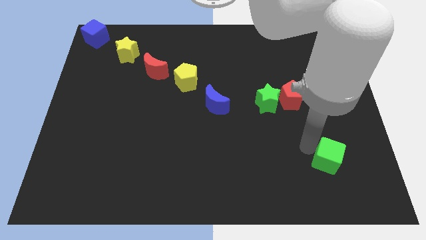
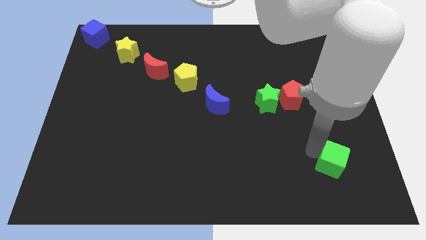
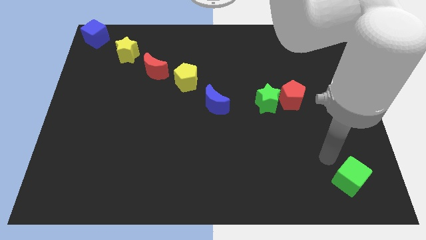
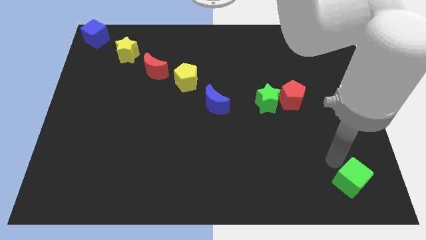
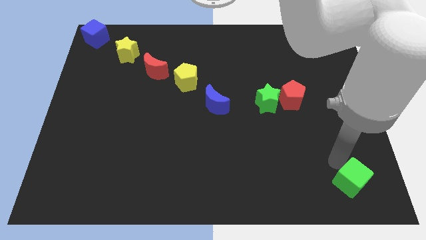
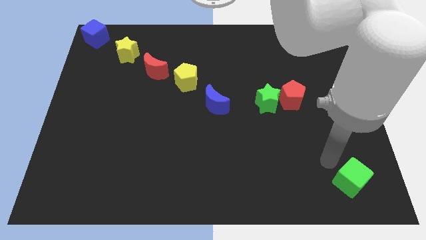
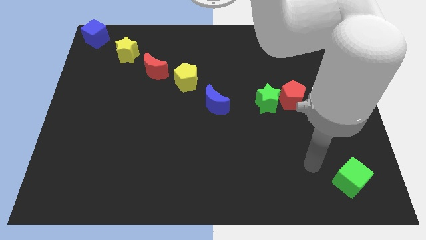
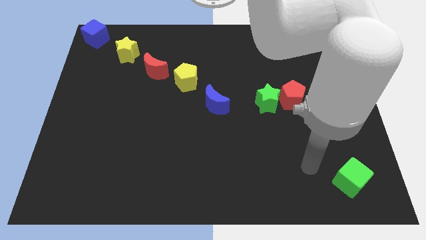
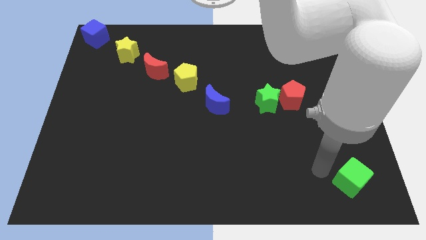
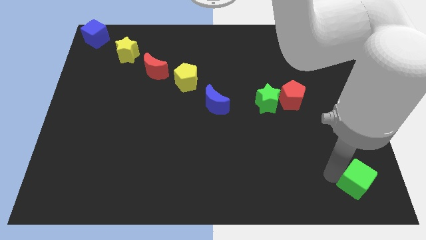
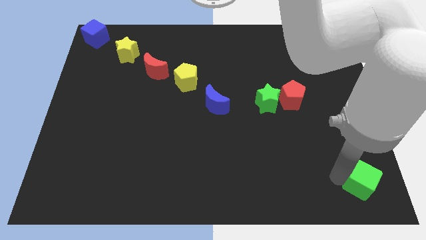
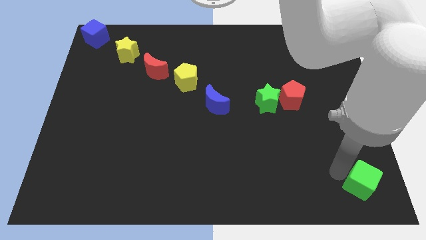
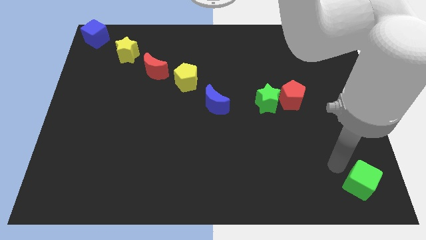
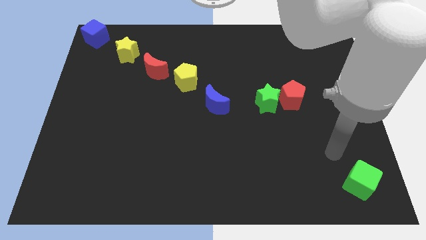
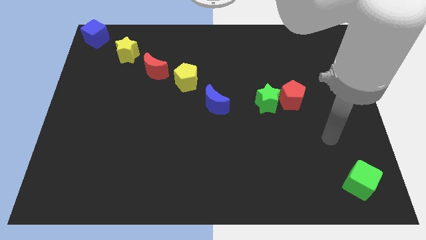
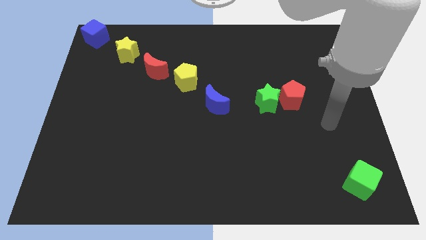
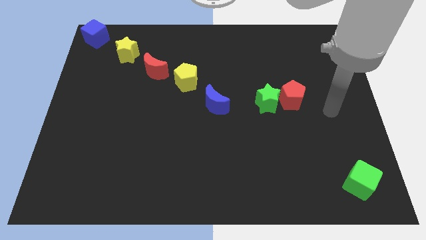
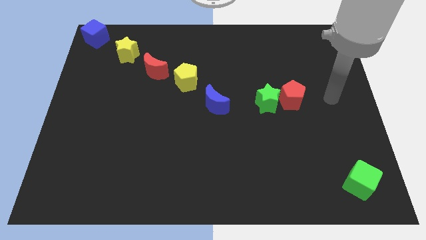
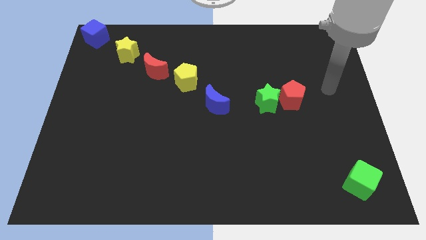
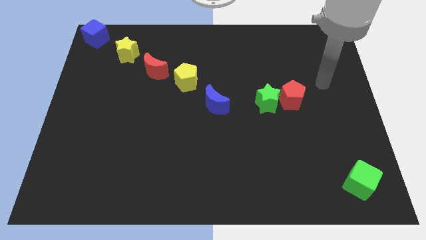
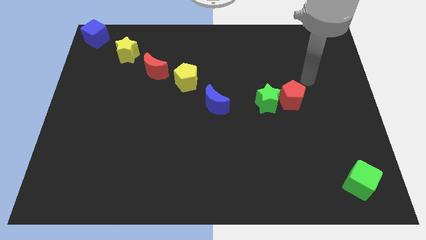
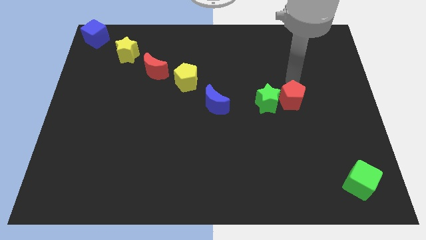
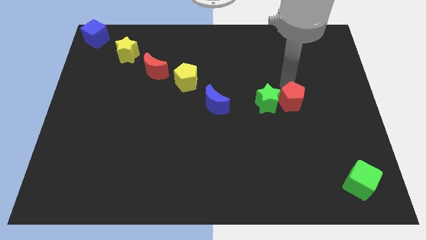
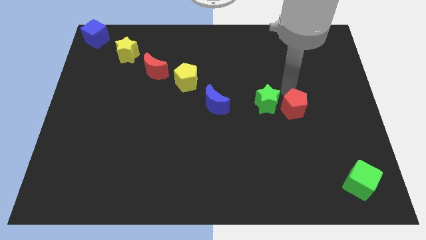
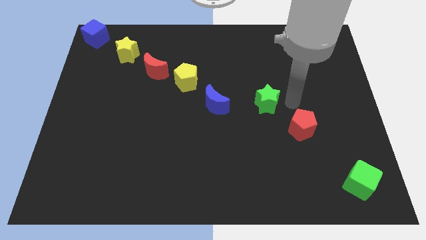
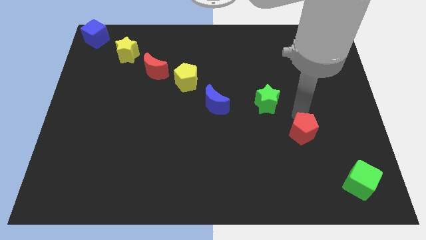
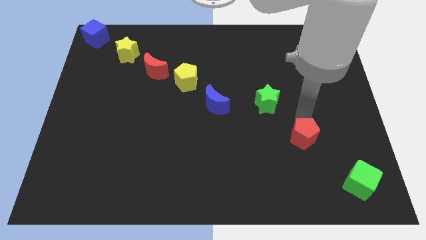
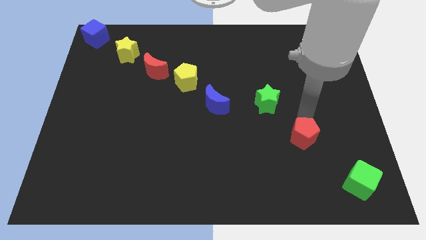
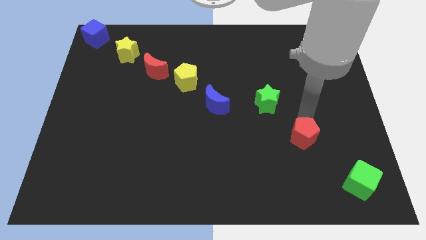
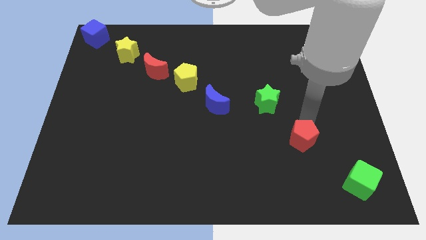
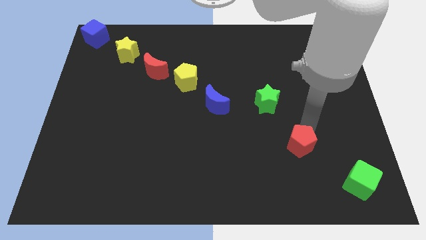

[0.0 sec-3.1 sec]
move red pentagon towards the green block

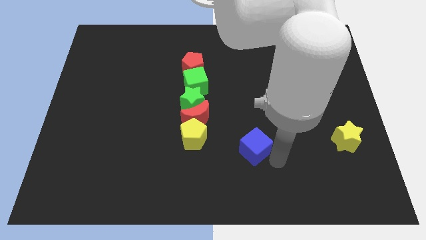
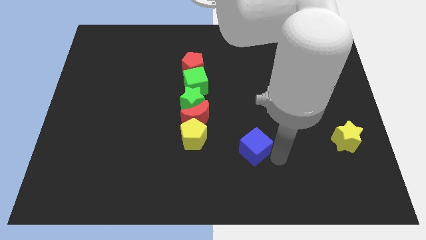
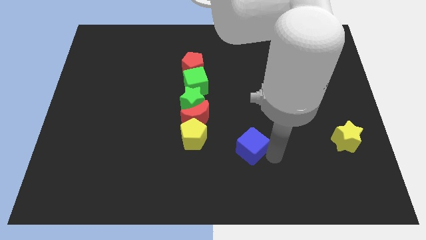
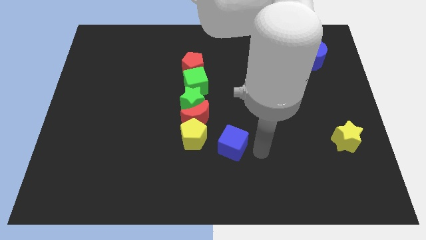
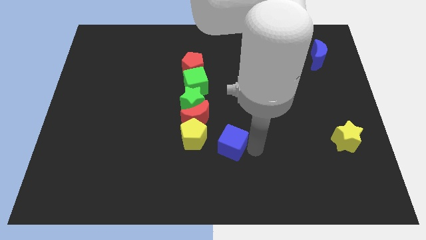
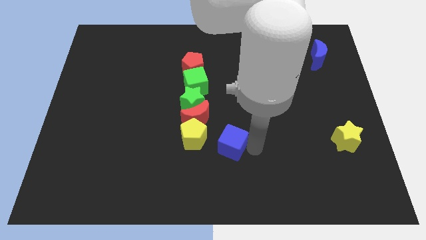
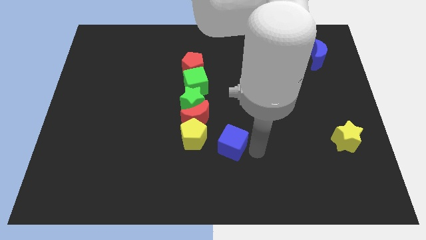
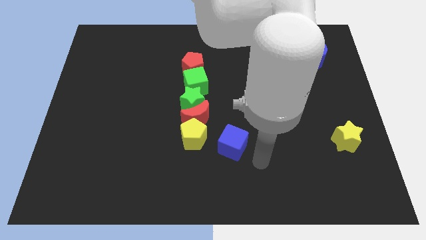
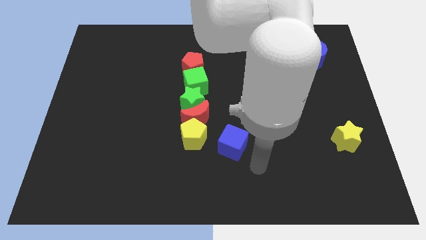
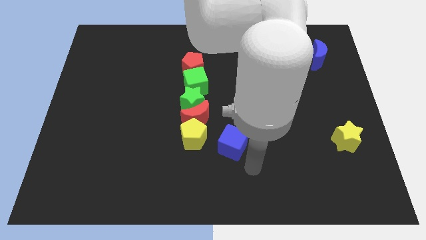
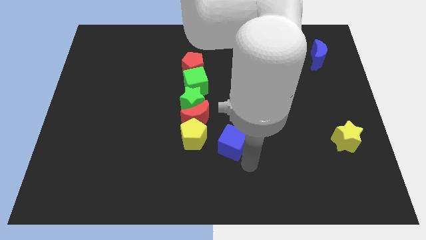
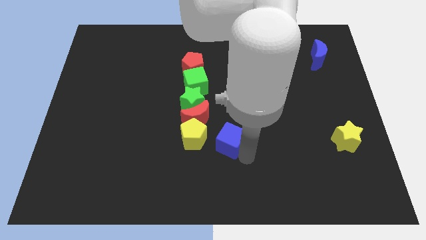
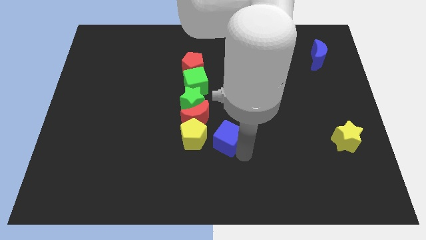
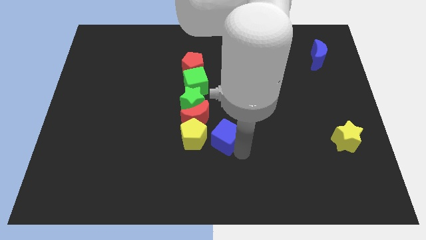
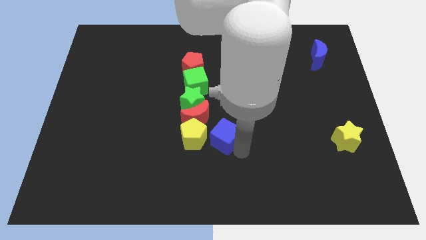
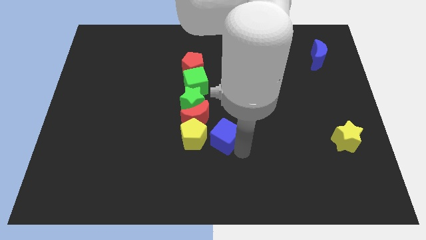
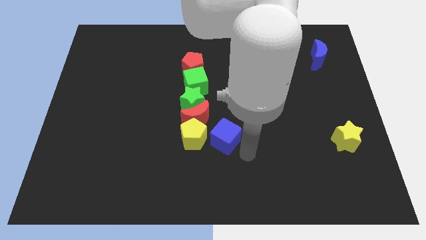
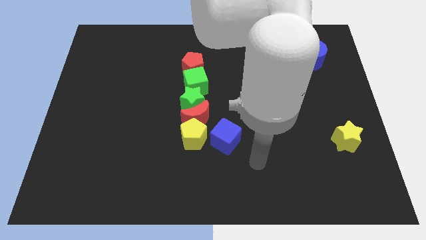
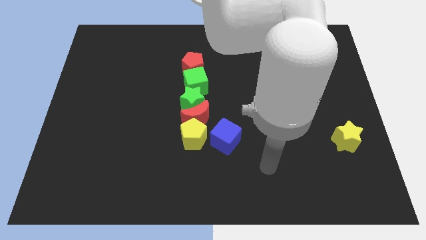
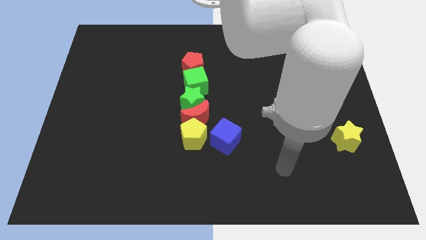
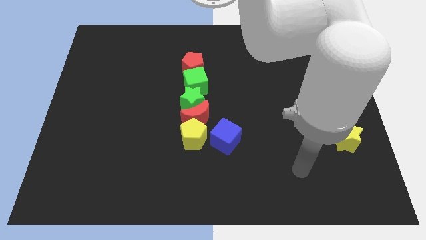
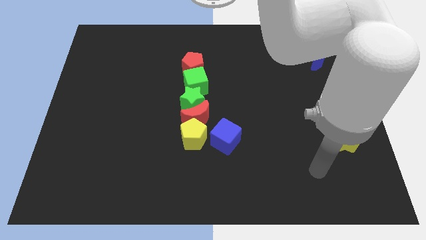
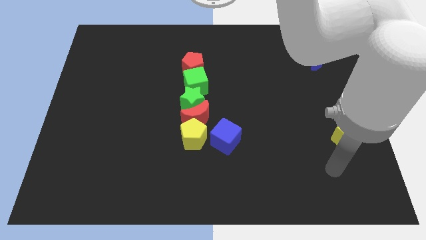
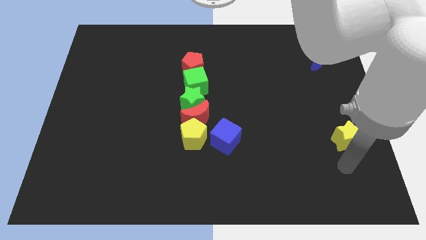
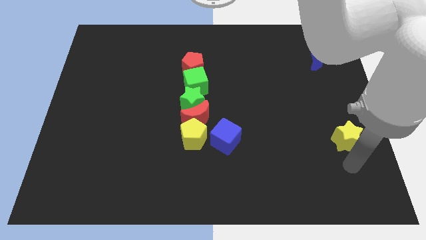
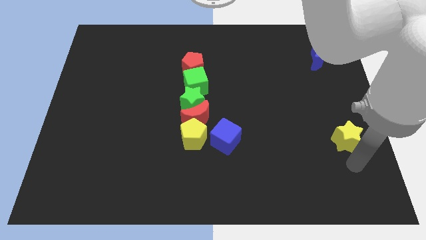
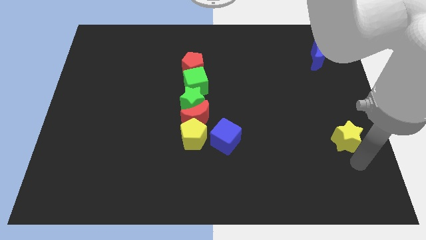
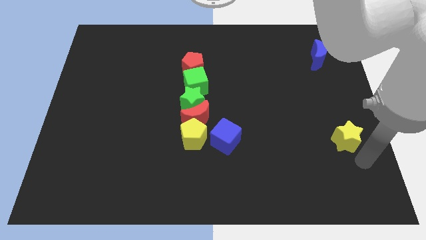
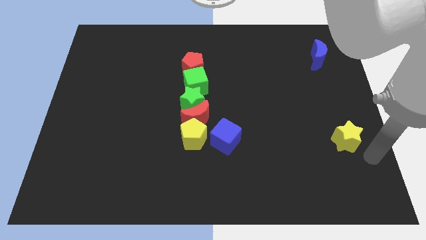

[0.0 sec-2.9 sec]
move the blue cube to the right side of the yellow pentagon

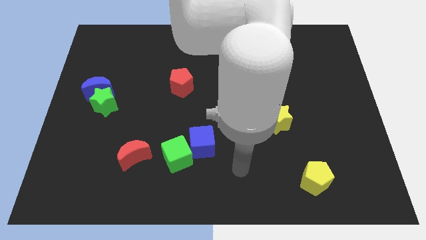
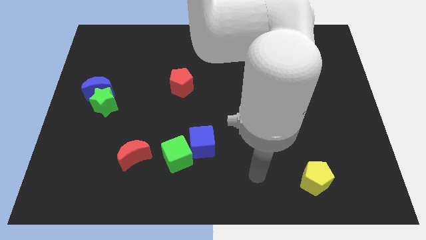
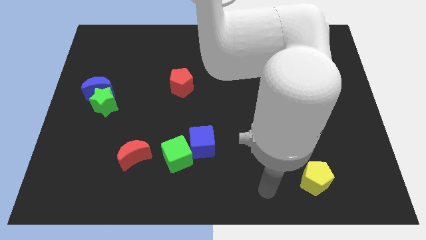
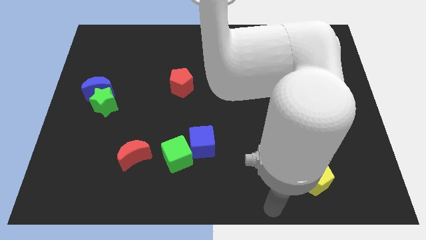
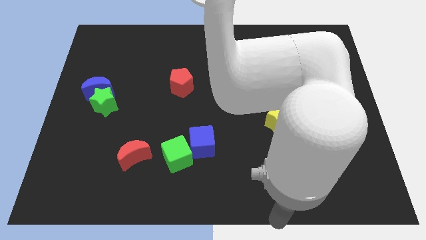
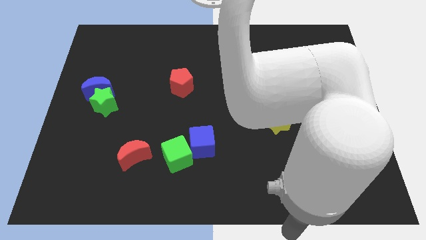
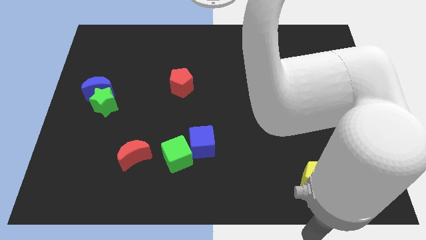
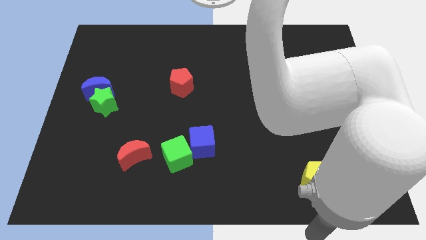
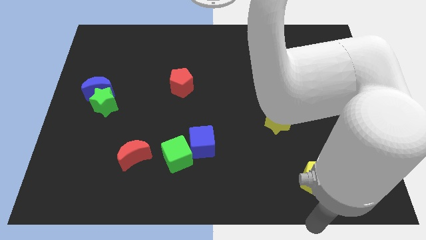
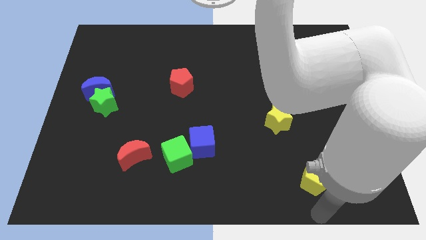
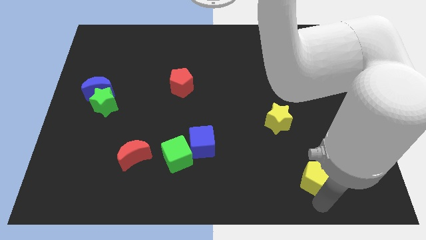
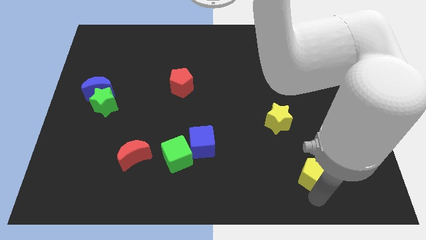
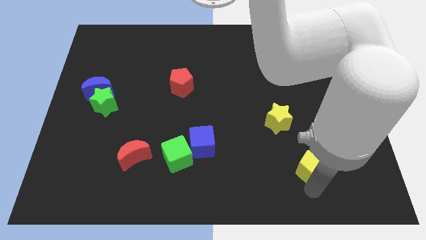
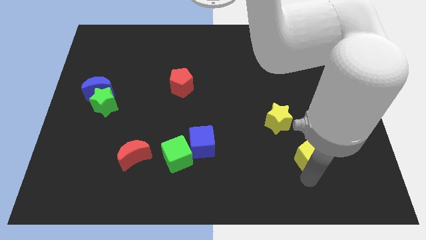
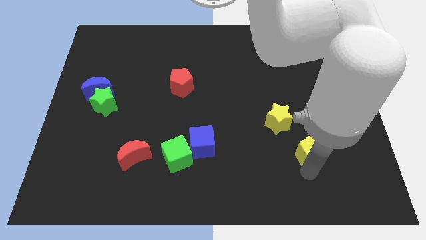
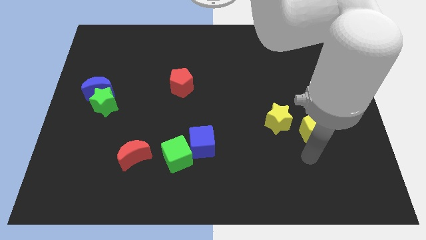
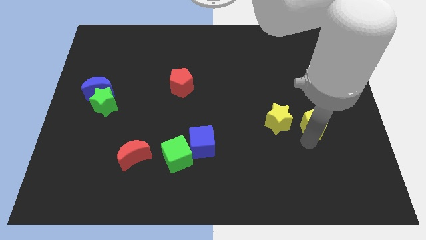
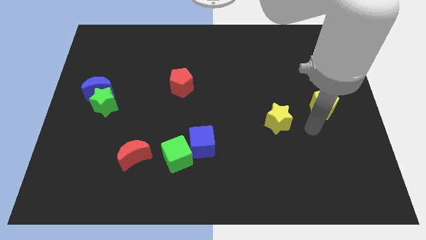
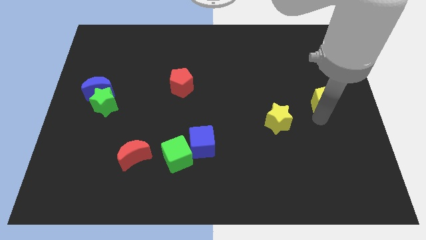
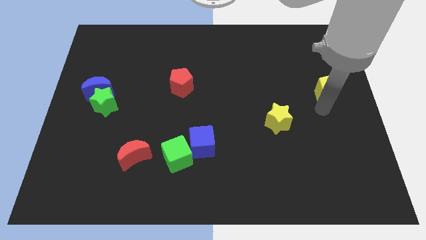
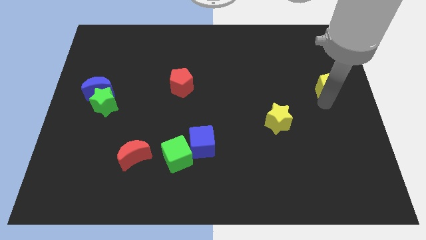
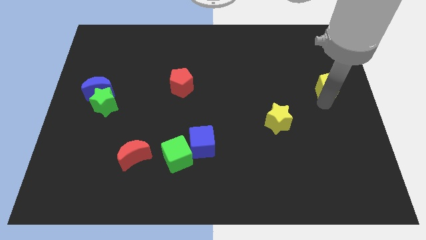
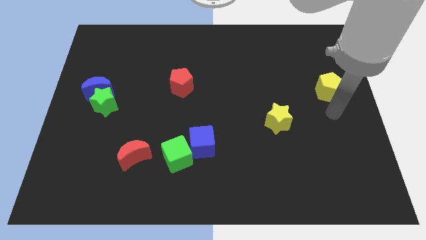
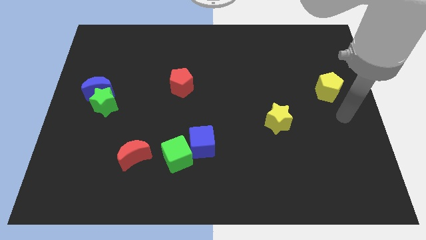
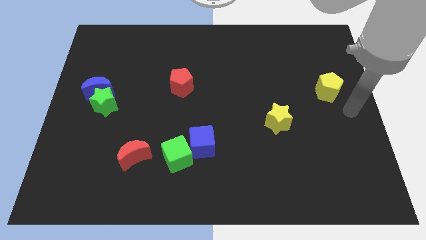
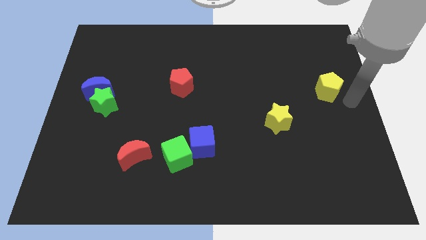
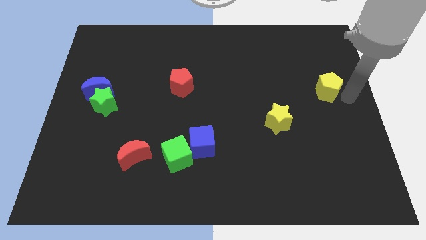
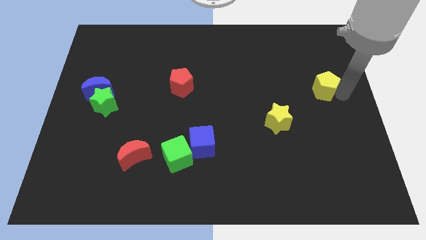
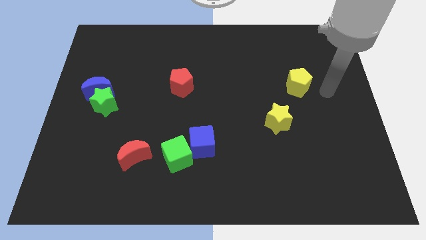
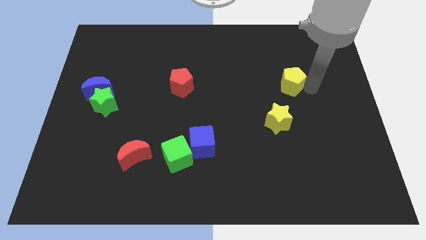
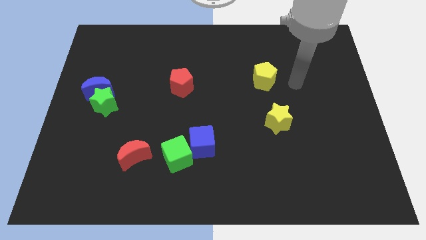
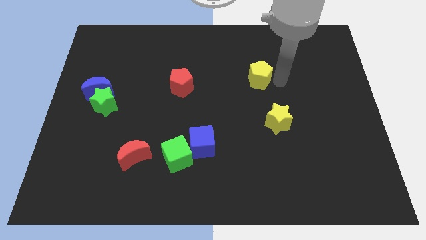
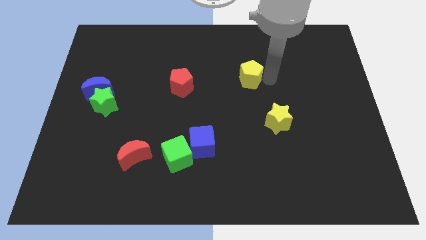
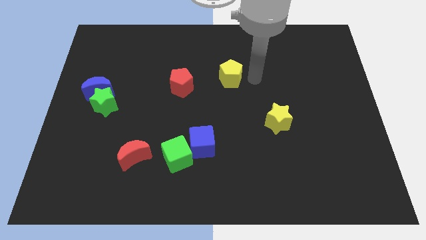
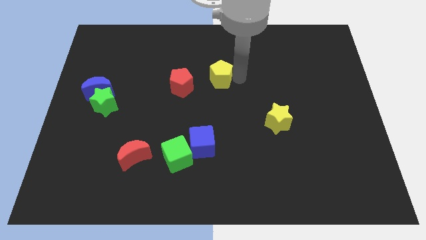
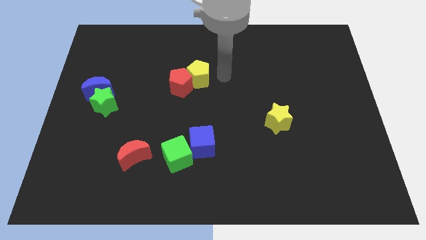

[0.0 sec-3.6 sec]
move the yellow pentagon into the red pentagon
